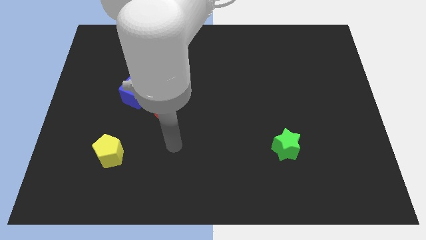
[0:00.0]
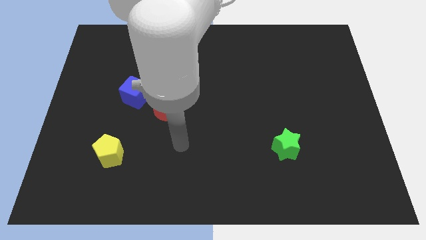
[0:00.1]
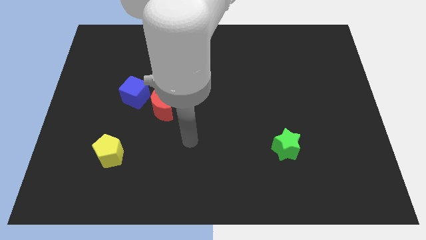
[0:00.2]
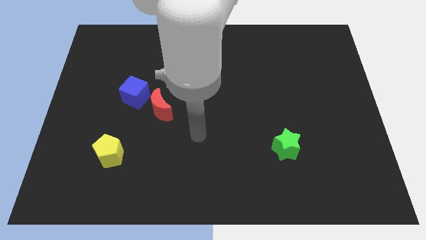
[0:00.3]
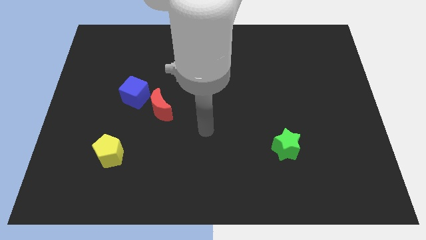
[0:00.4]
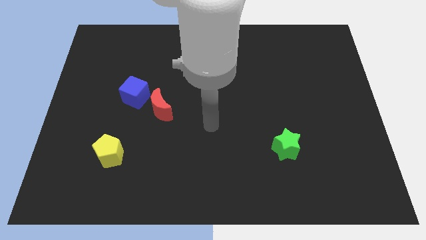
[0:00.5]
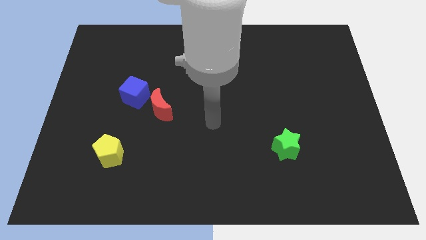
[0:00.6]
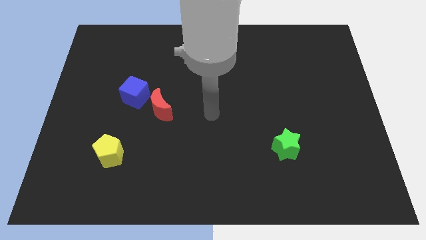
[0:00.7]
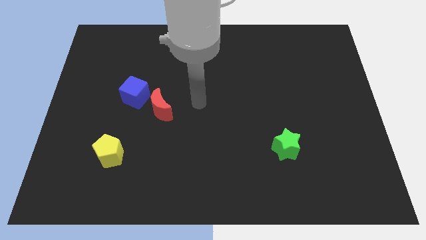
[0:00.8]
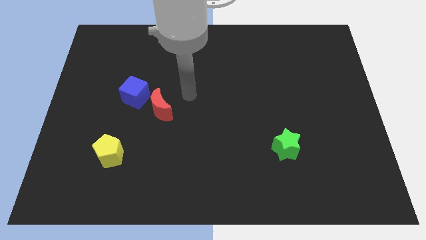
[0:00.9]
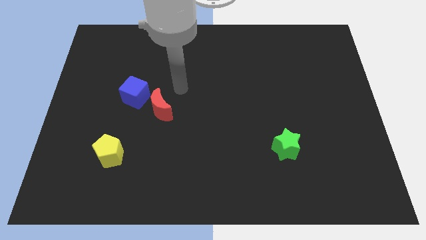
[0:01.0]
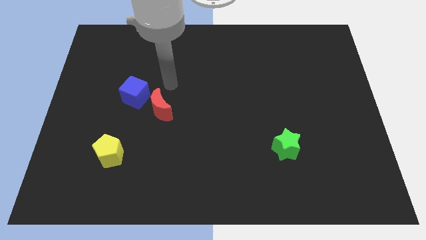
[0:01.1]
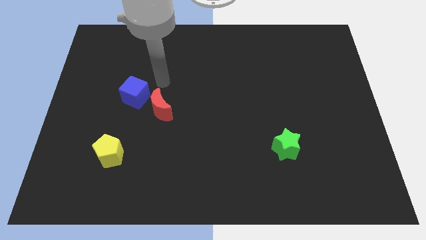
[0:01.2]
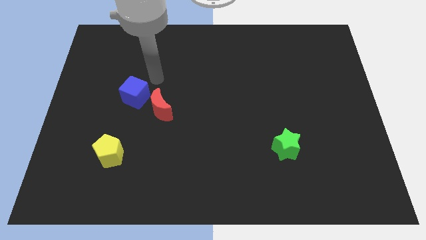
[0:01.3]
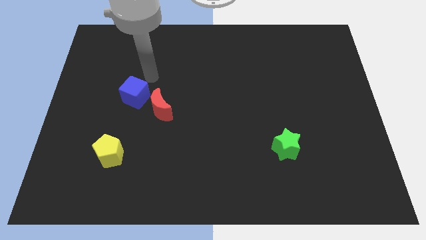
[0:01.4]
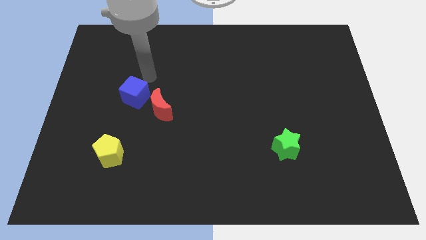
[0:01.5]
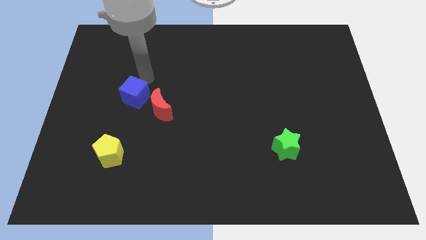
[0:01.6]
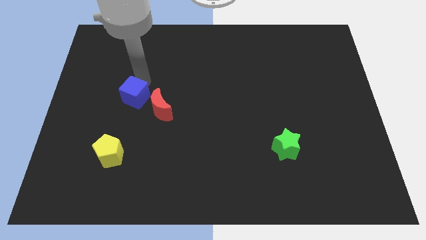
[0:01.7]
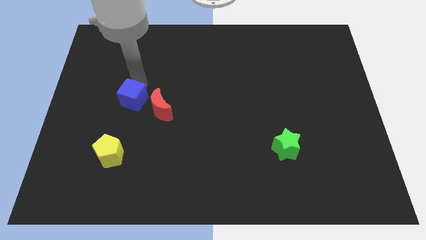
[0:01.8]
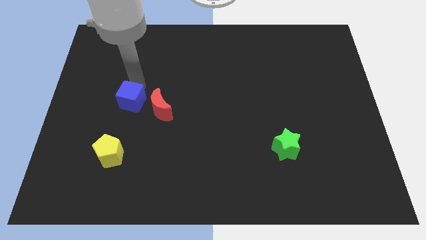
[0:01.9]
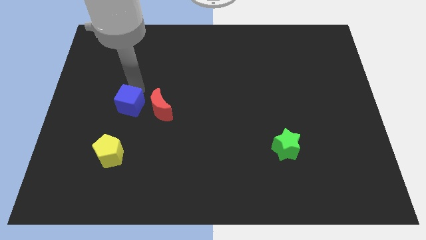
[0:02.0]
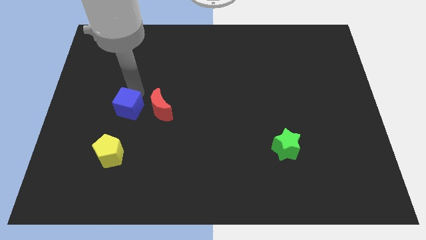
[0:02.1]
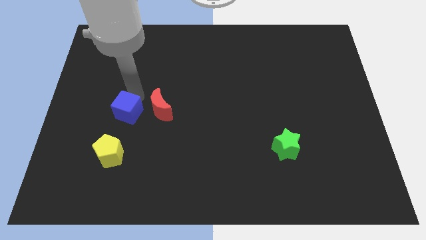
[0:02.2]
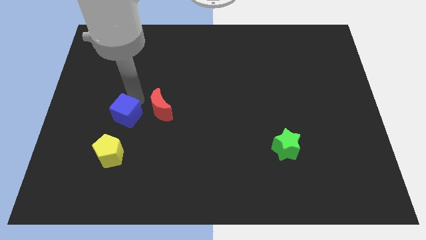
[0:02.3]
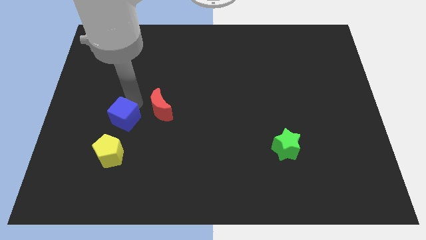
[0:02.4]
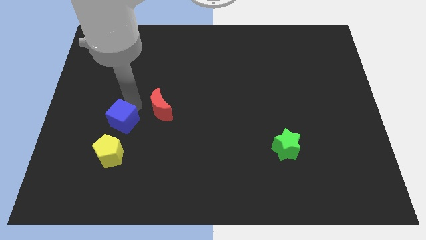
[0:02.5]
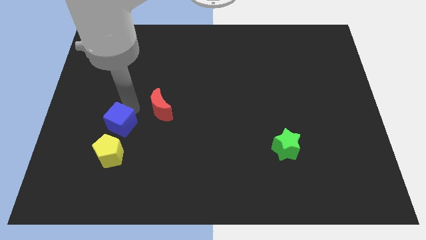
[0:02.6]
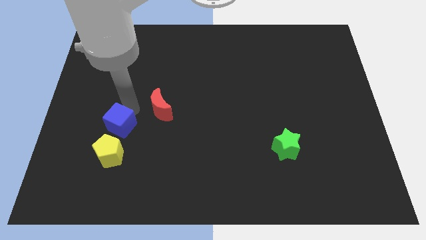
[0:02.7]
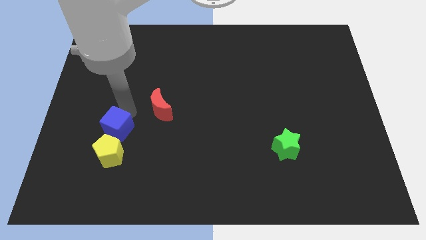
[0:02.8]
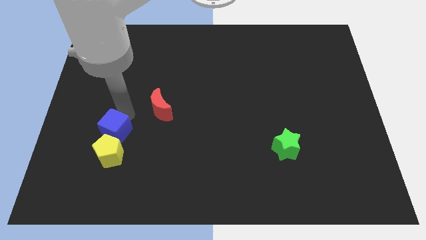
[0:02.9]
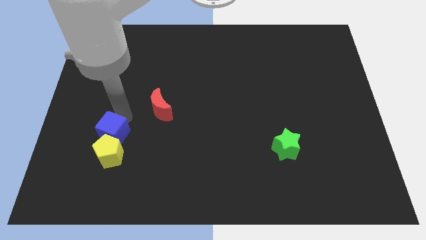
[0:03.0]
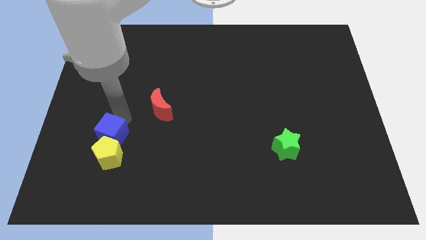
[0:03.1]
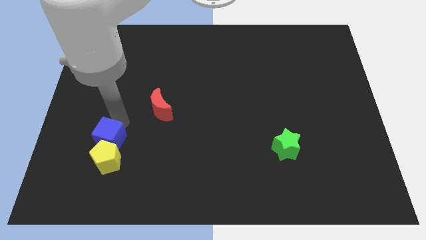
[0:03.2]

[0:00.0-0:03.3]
slide the blue block close to the yellow pentagon

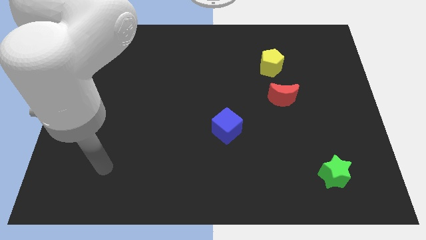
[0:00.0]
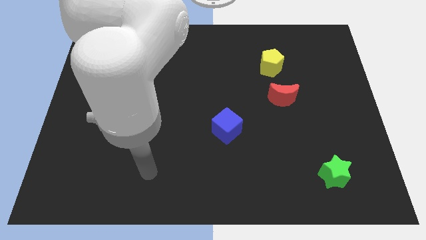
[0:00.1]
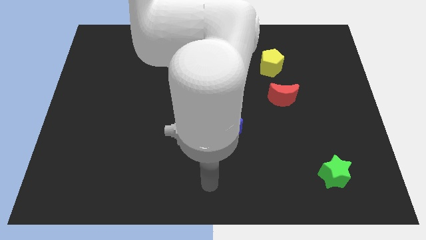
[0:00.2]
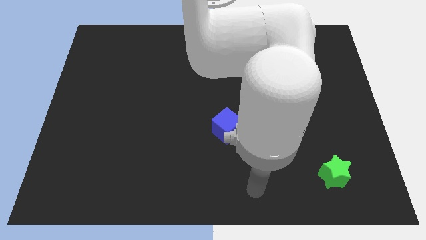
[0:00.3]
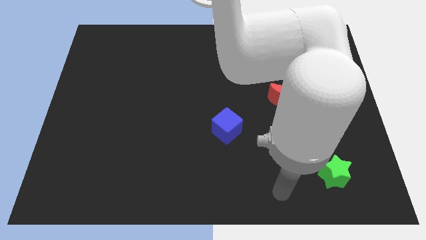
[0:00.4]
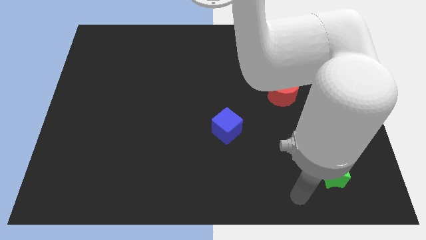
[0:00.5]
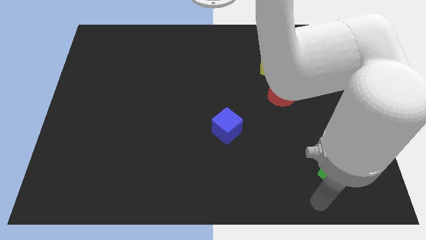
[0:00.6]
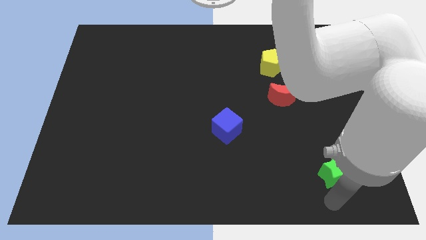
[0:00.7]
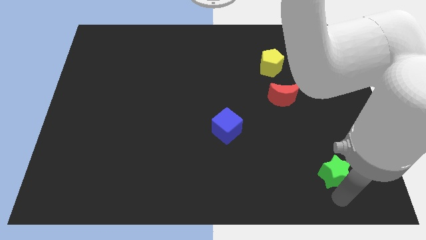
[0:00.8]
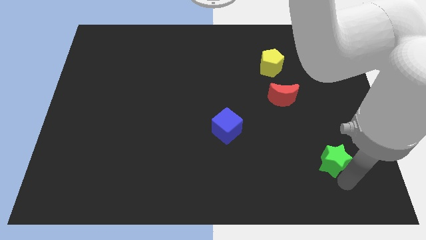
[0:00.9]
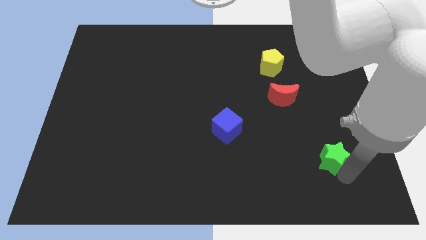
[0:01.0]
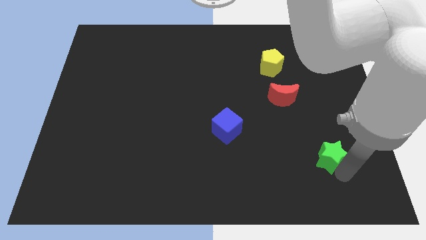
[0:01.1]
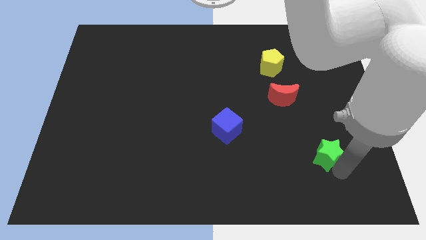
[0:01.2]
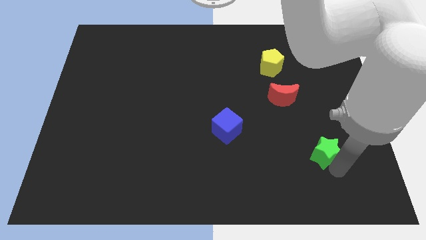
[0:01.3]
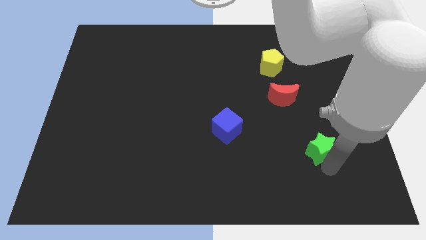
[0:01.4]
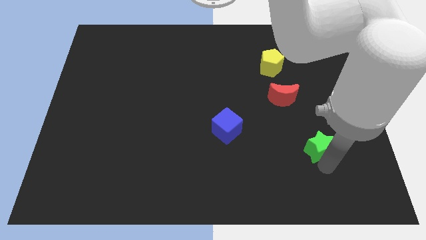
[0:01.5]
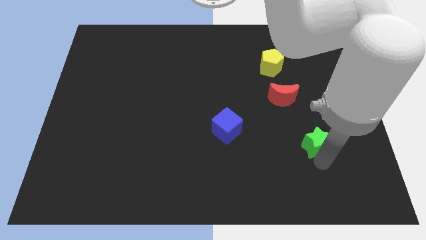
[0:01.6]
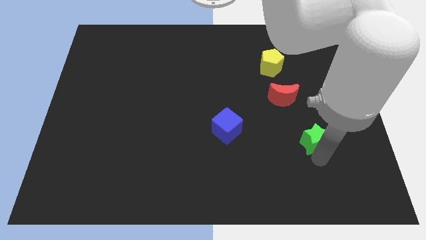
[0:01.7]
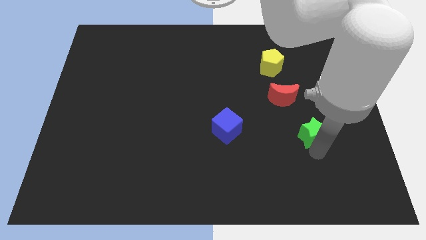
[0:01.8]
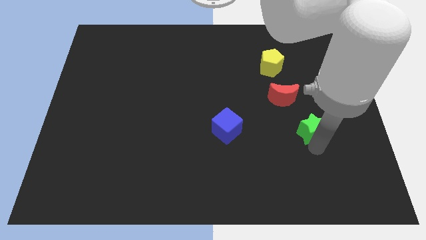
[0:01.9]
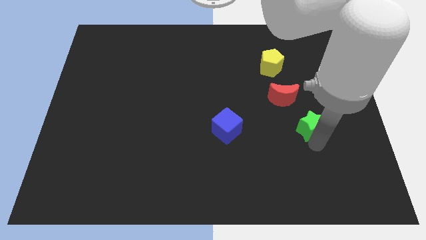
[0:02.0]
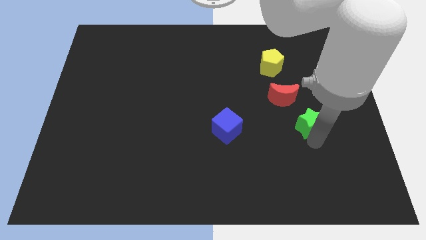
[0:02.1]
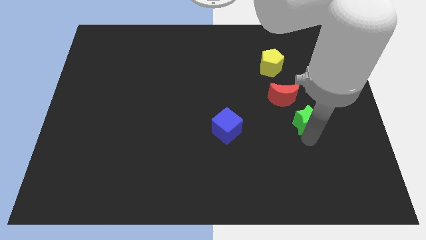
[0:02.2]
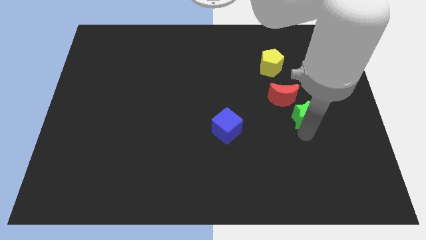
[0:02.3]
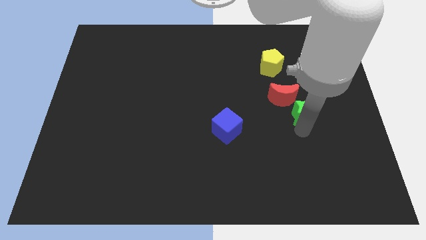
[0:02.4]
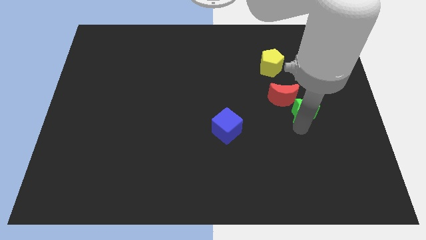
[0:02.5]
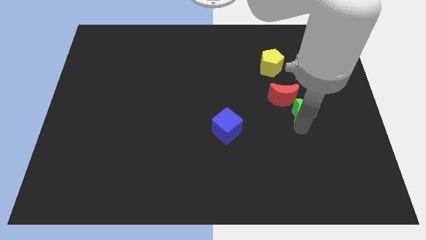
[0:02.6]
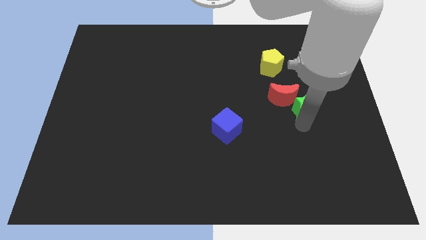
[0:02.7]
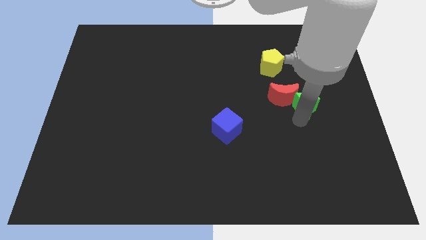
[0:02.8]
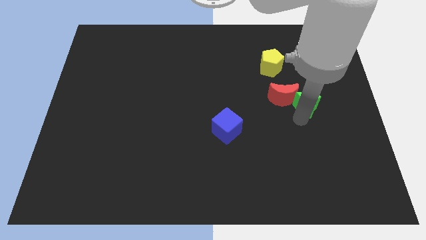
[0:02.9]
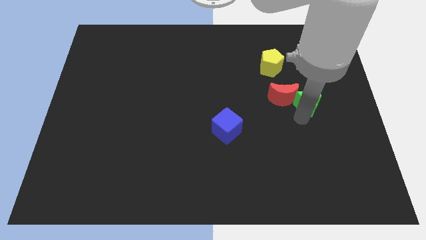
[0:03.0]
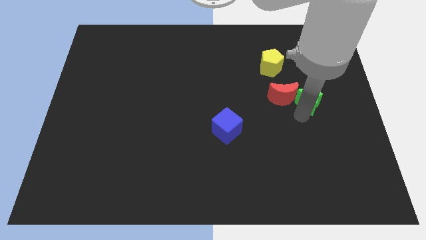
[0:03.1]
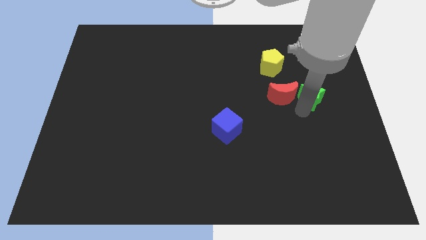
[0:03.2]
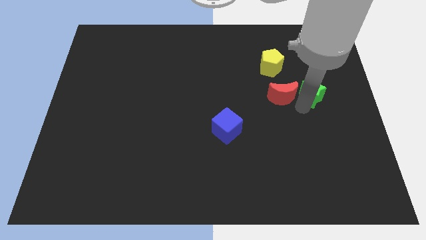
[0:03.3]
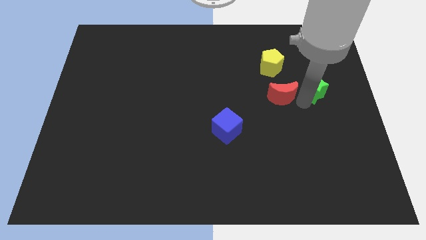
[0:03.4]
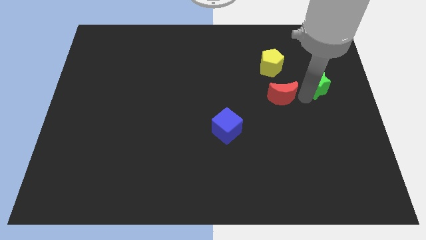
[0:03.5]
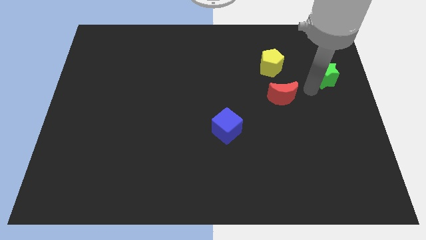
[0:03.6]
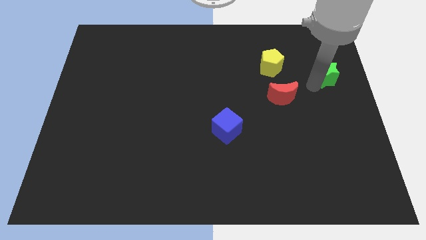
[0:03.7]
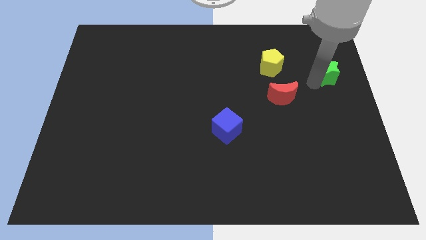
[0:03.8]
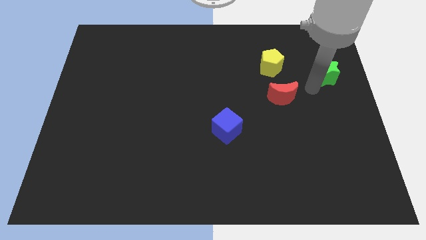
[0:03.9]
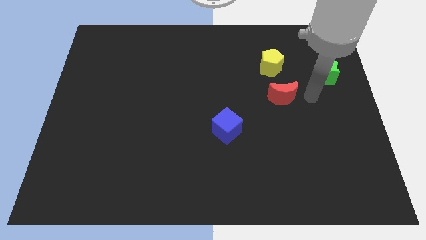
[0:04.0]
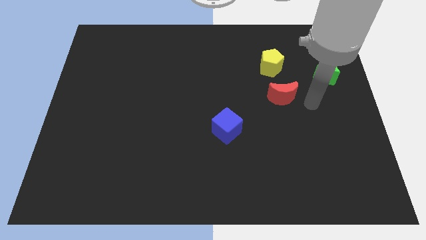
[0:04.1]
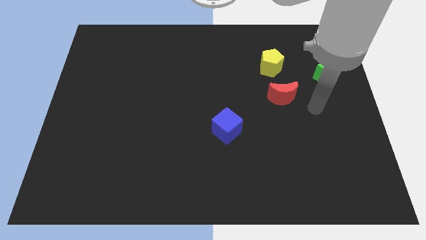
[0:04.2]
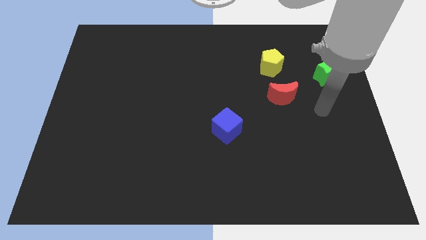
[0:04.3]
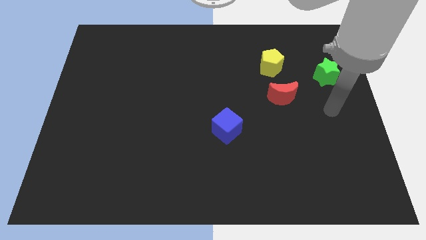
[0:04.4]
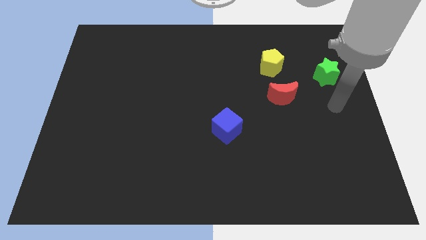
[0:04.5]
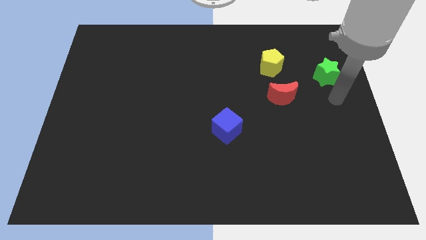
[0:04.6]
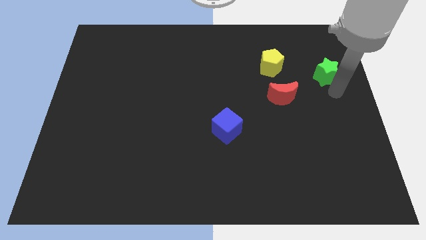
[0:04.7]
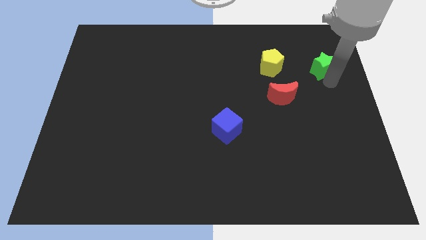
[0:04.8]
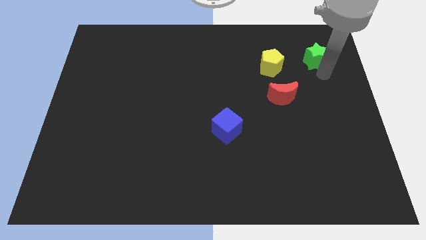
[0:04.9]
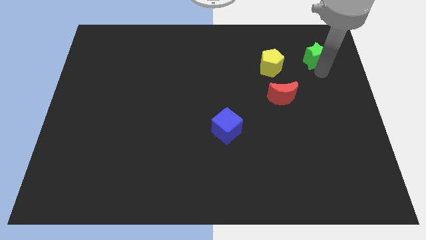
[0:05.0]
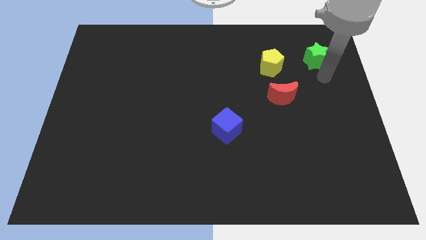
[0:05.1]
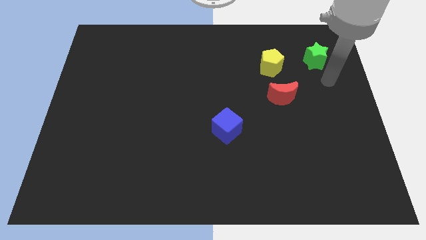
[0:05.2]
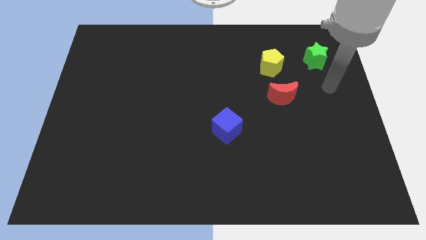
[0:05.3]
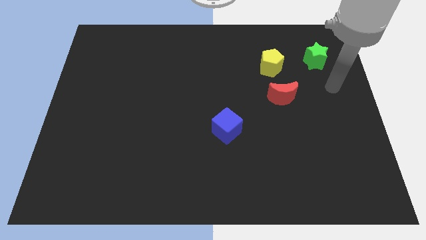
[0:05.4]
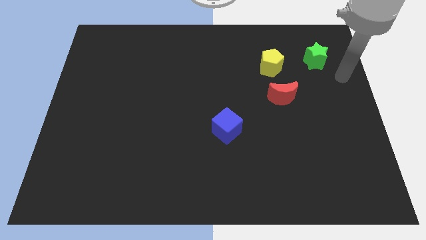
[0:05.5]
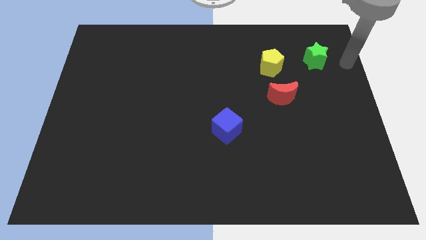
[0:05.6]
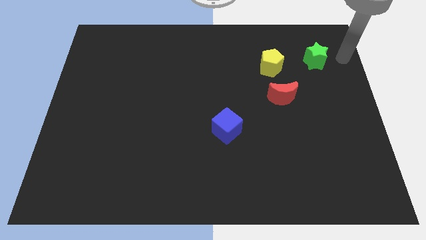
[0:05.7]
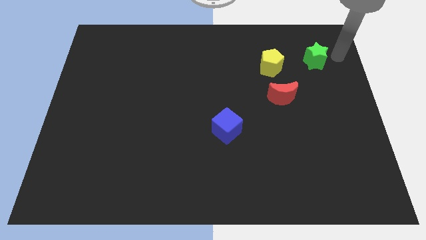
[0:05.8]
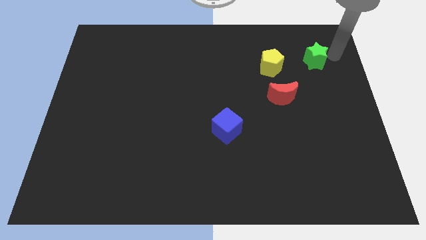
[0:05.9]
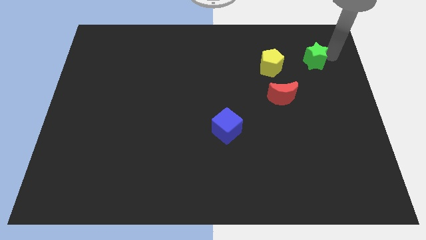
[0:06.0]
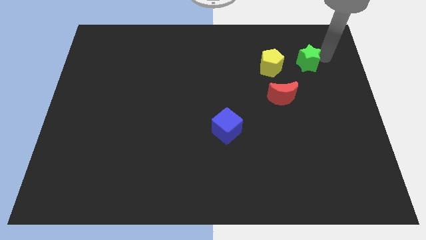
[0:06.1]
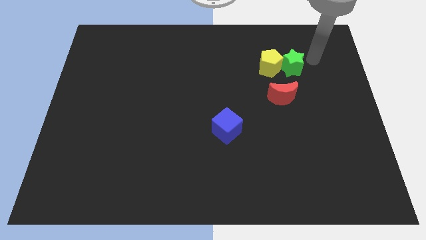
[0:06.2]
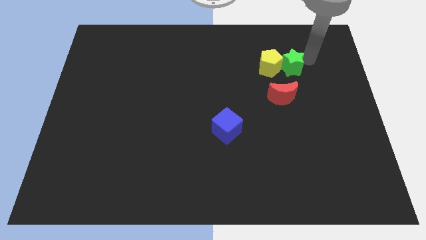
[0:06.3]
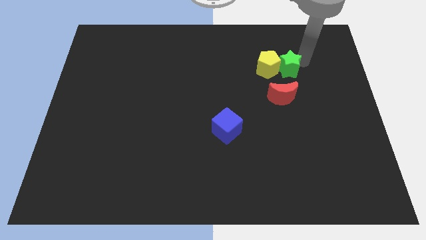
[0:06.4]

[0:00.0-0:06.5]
put the green block close to the pentagon
